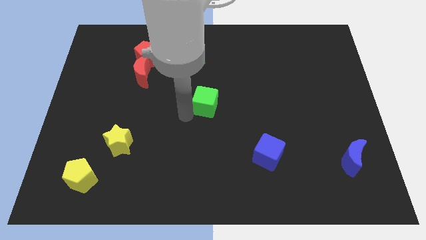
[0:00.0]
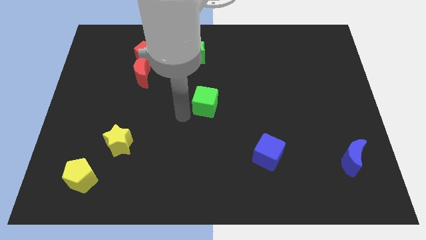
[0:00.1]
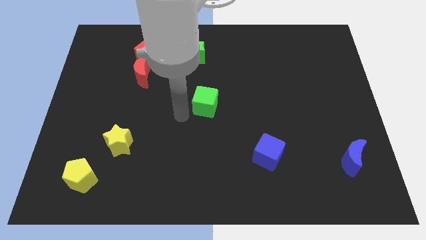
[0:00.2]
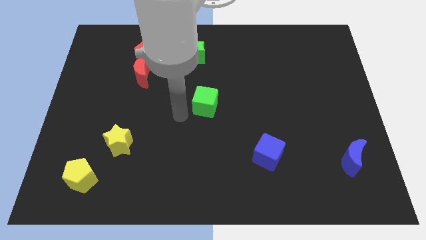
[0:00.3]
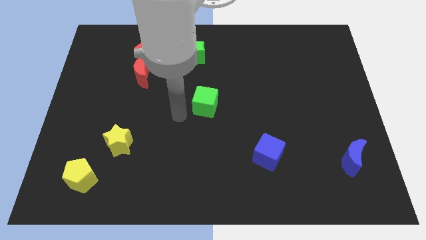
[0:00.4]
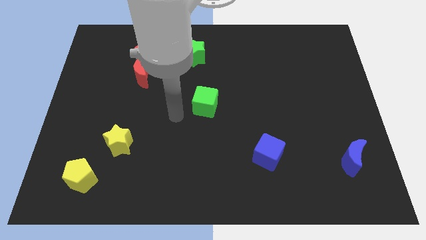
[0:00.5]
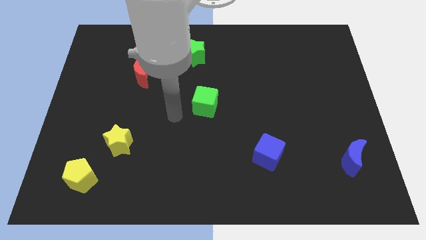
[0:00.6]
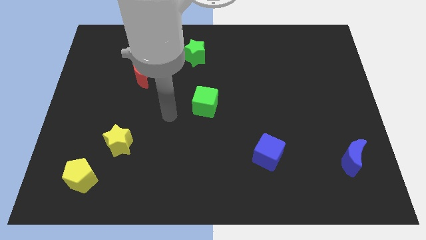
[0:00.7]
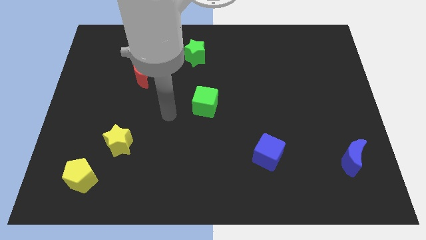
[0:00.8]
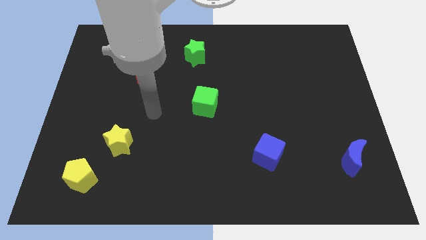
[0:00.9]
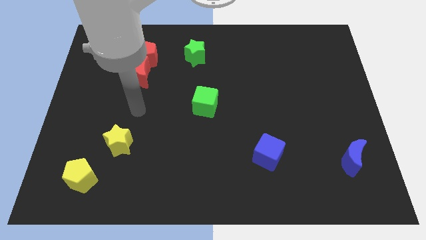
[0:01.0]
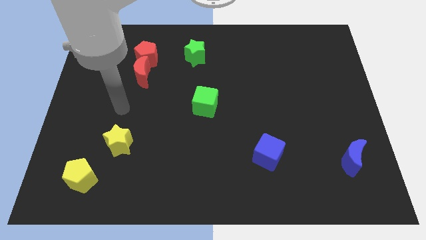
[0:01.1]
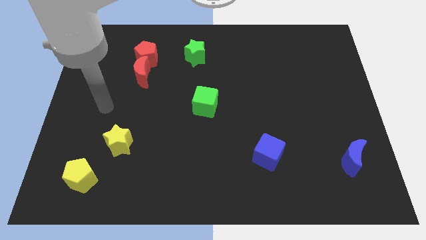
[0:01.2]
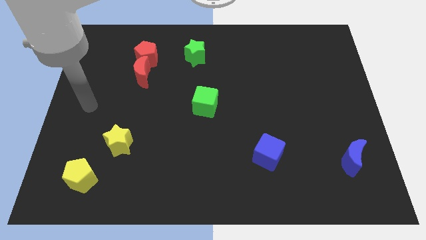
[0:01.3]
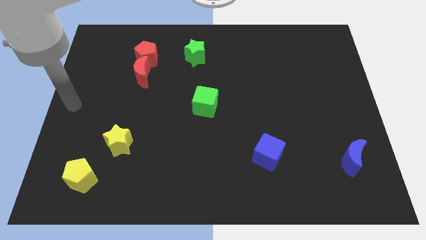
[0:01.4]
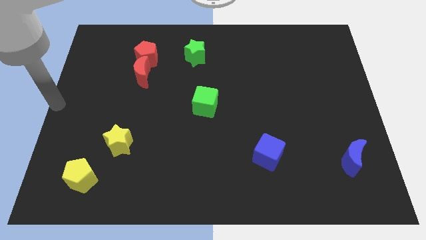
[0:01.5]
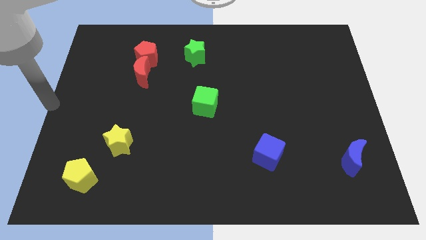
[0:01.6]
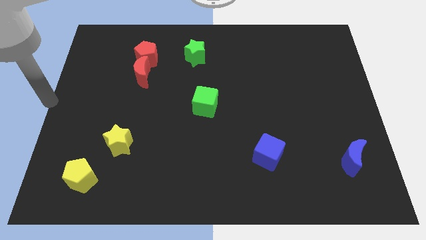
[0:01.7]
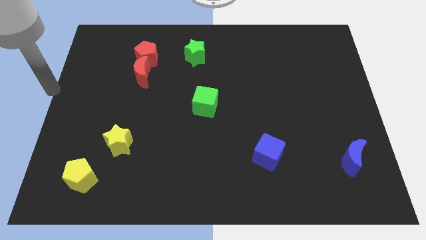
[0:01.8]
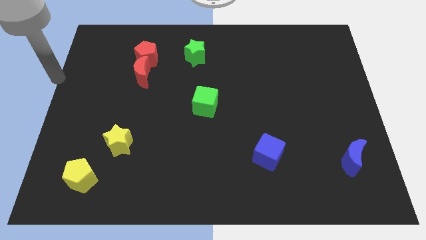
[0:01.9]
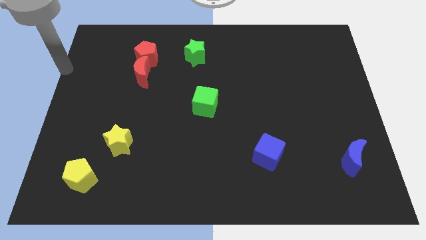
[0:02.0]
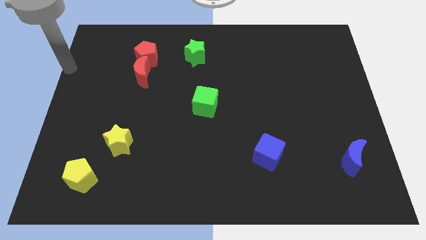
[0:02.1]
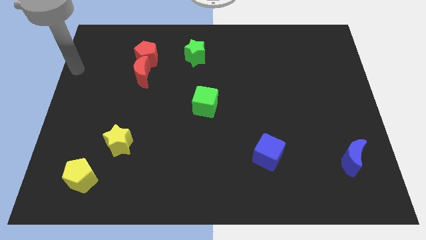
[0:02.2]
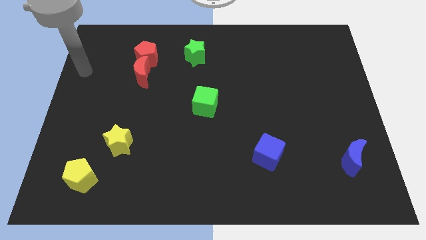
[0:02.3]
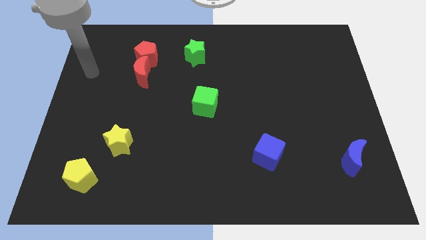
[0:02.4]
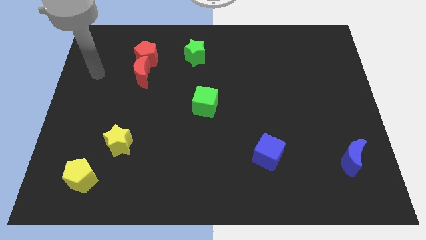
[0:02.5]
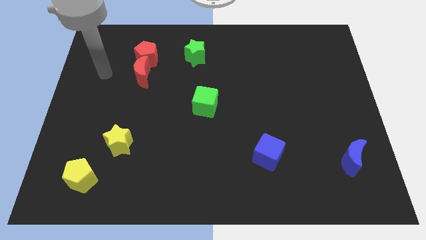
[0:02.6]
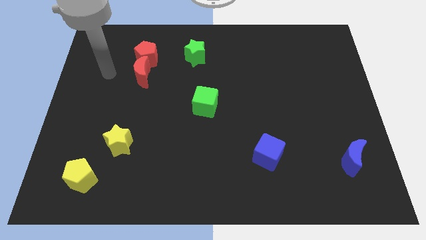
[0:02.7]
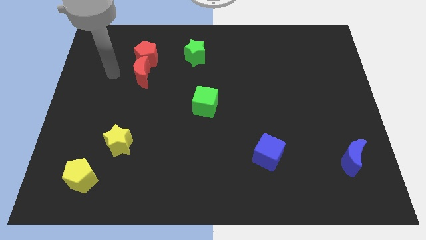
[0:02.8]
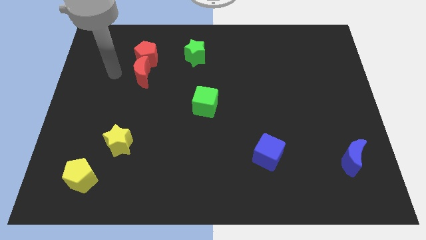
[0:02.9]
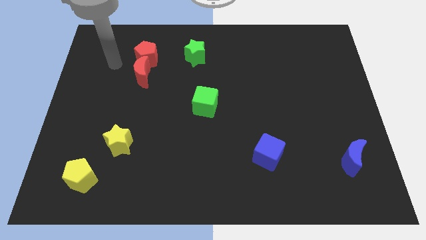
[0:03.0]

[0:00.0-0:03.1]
move your arm and point to the left of red moon

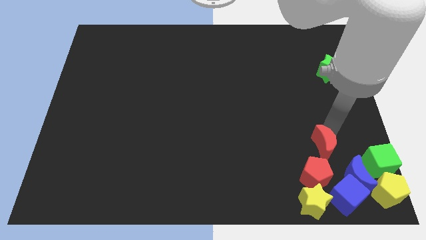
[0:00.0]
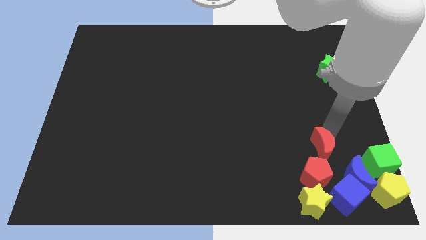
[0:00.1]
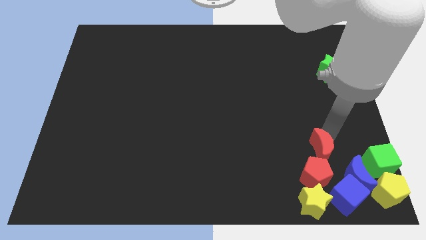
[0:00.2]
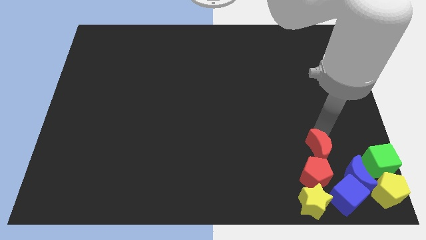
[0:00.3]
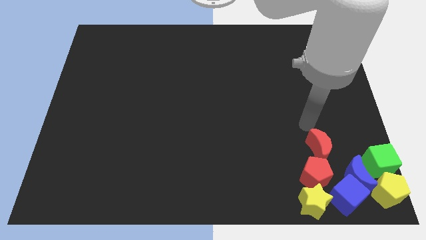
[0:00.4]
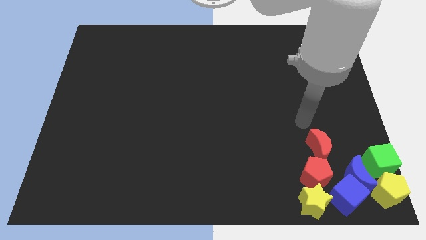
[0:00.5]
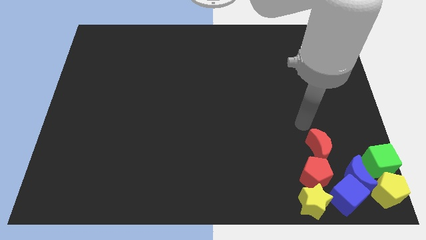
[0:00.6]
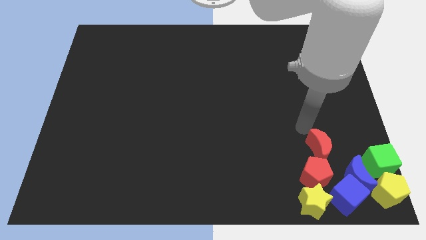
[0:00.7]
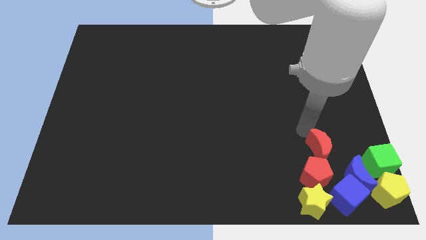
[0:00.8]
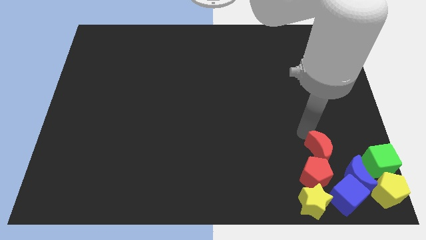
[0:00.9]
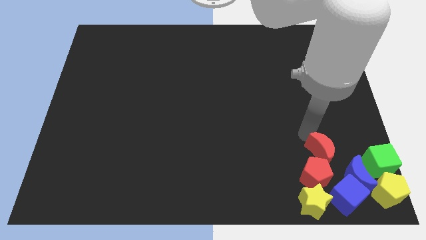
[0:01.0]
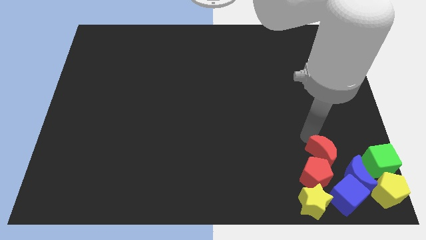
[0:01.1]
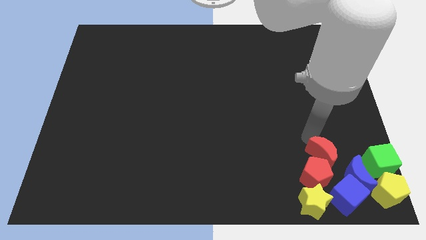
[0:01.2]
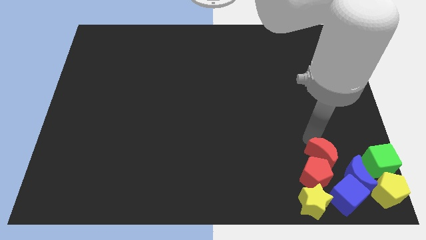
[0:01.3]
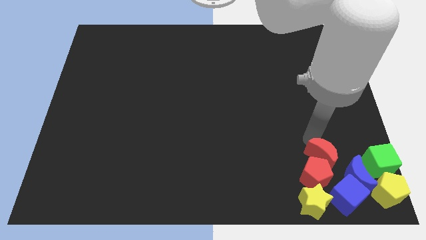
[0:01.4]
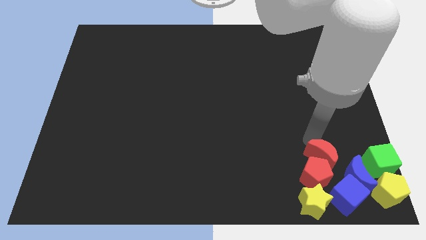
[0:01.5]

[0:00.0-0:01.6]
place the red crescent at the top of the red pentagon

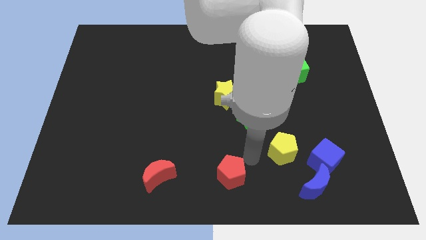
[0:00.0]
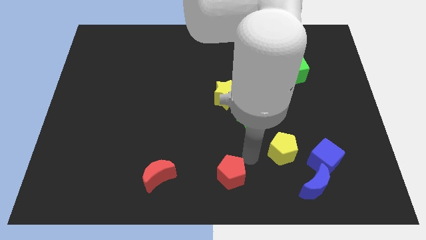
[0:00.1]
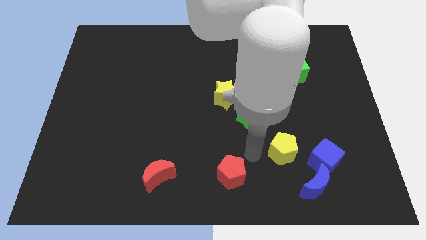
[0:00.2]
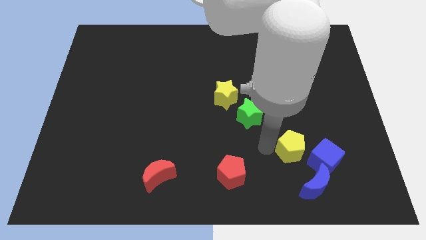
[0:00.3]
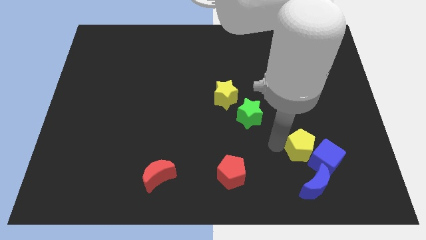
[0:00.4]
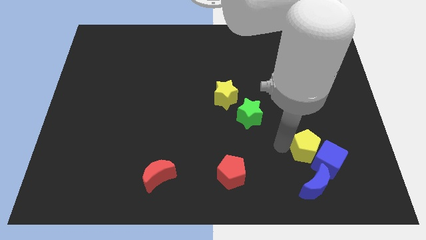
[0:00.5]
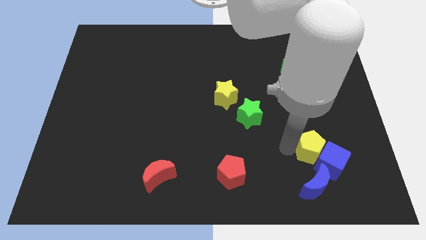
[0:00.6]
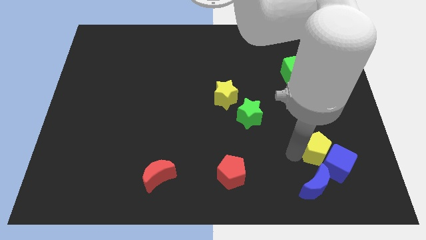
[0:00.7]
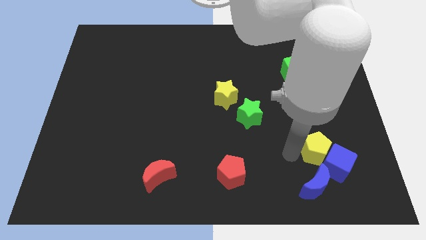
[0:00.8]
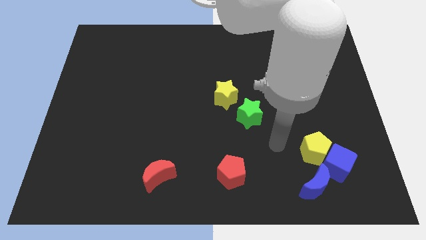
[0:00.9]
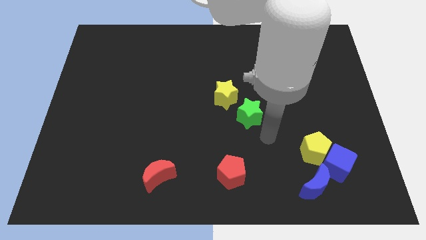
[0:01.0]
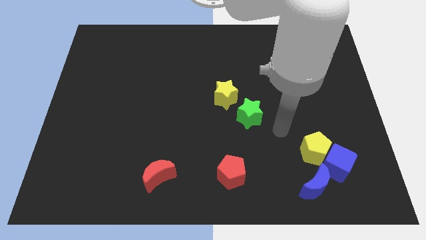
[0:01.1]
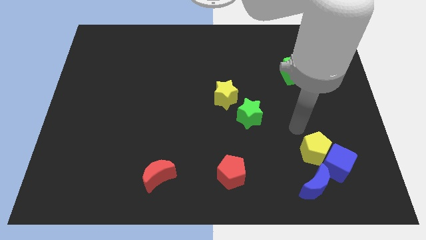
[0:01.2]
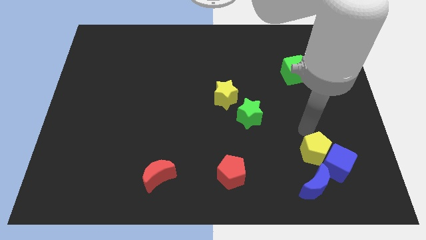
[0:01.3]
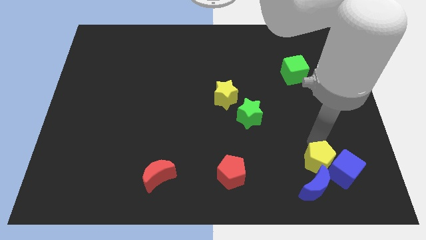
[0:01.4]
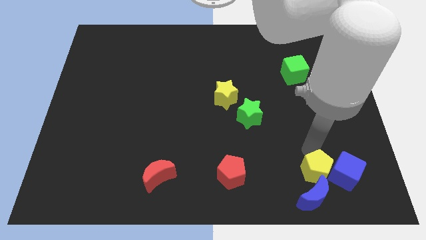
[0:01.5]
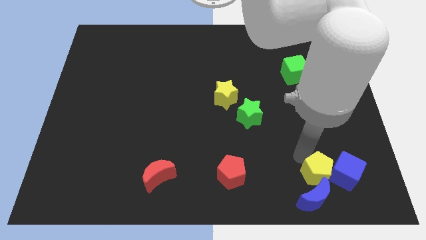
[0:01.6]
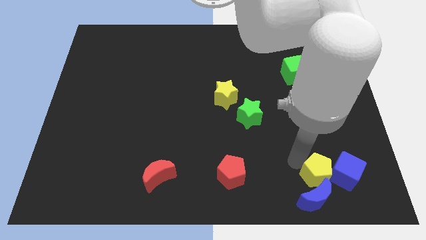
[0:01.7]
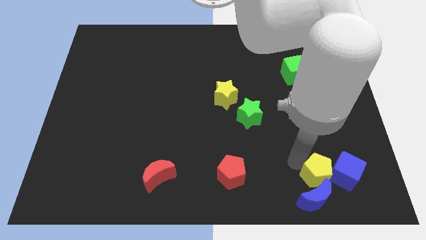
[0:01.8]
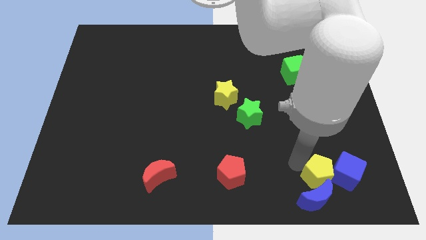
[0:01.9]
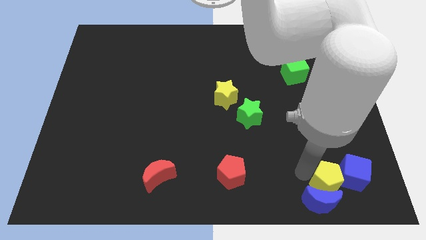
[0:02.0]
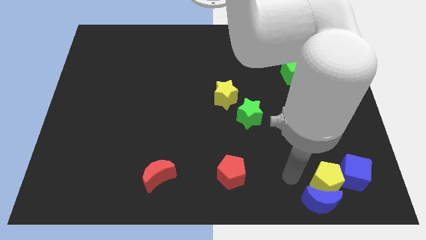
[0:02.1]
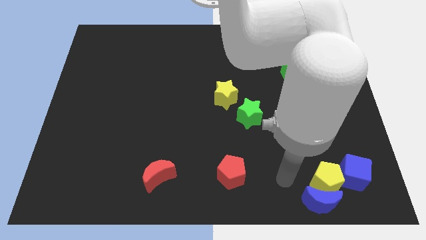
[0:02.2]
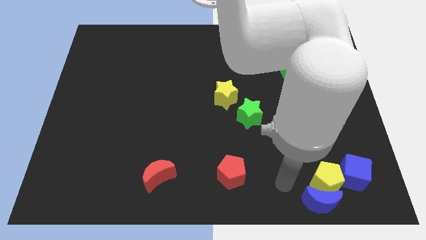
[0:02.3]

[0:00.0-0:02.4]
place the yellow pentagon between blue blocks

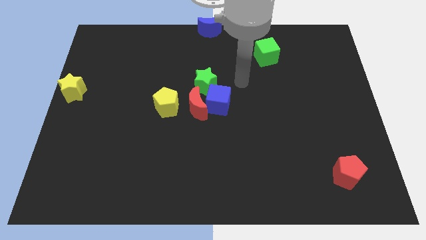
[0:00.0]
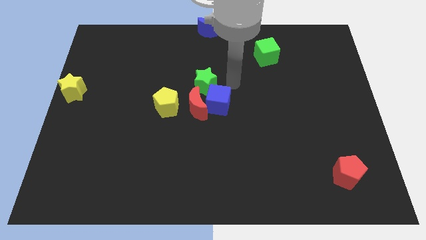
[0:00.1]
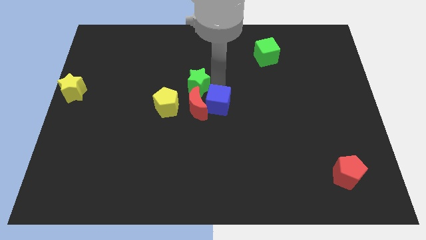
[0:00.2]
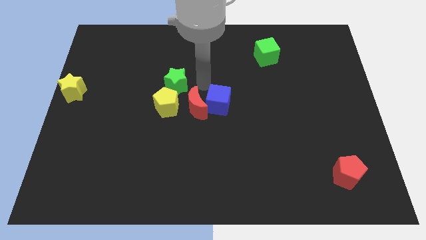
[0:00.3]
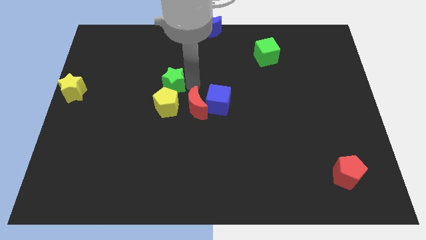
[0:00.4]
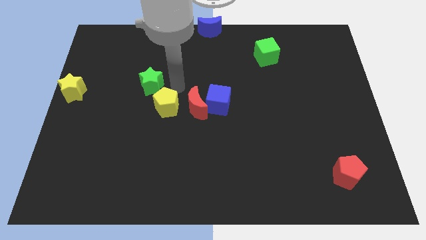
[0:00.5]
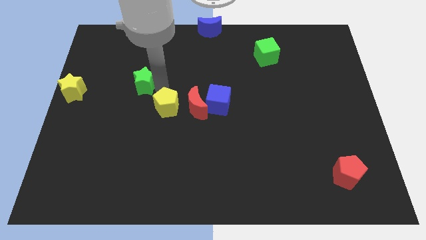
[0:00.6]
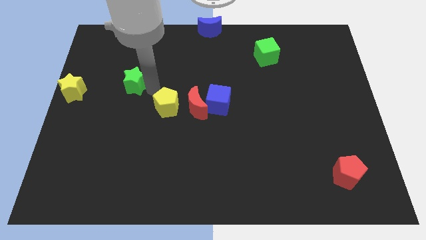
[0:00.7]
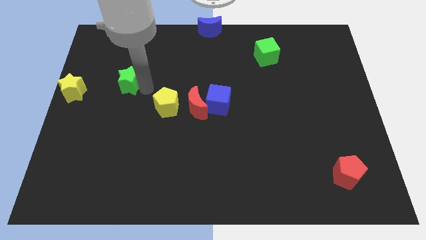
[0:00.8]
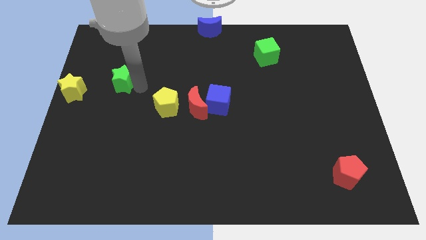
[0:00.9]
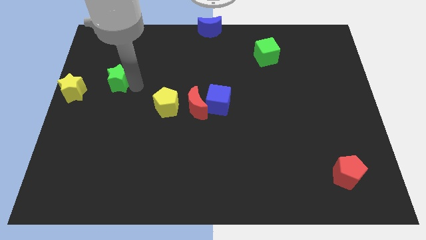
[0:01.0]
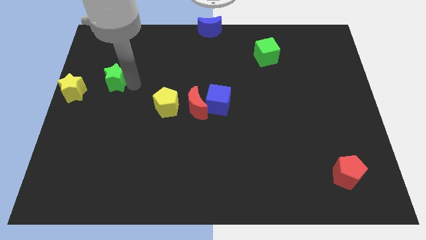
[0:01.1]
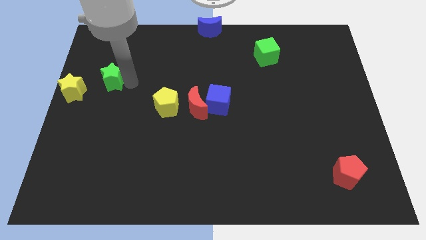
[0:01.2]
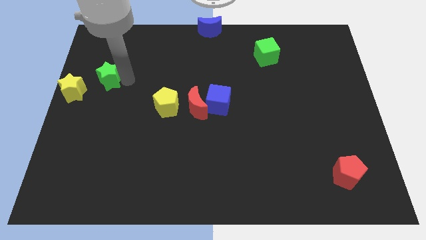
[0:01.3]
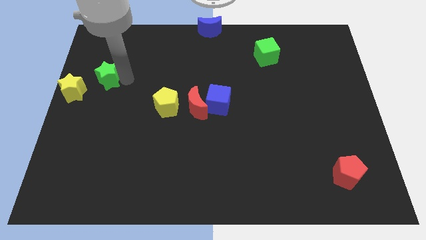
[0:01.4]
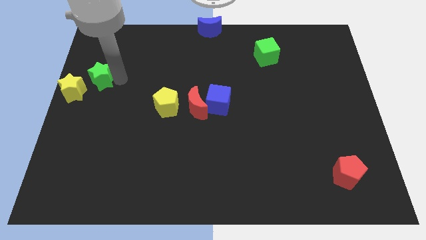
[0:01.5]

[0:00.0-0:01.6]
place green star near to yellow star

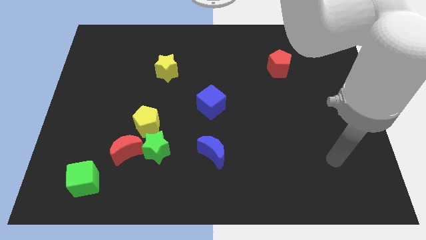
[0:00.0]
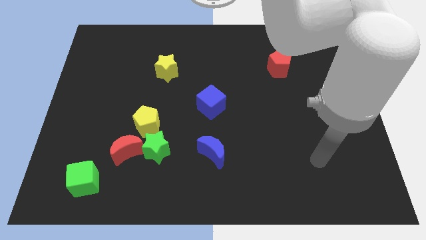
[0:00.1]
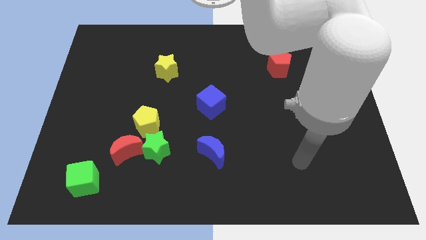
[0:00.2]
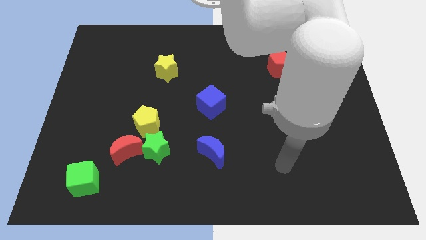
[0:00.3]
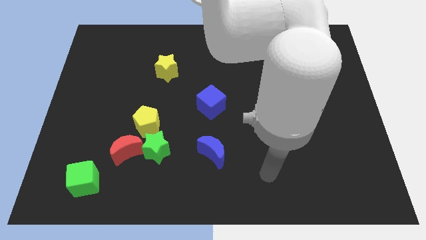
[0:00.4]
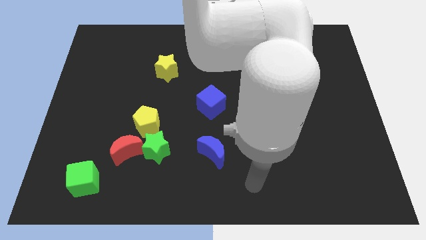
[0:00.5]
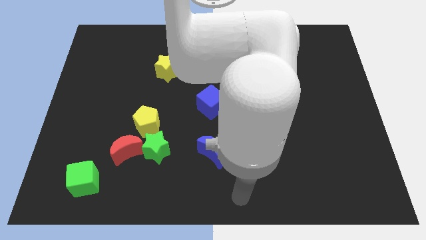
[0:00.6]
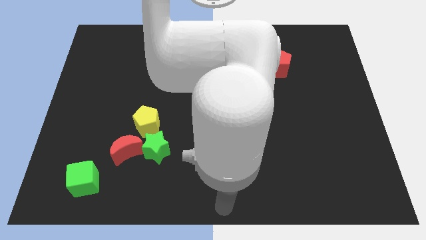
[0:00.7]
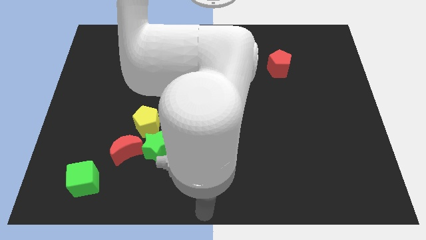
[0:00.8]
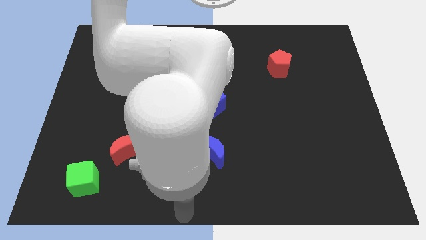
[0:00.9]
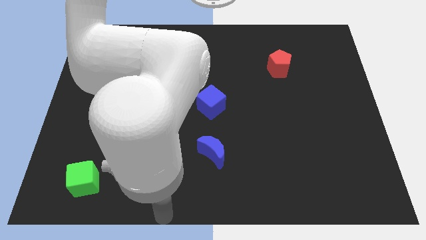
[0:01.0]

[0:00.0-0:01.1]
slide your arm below green star
